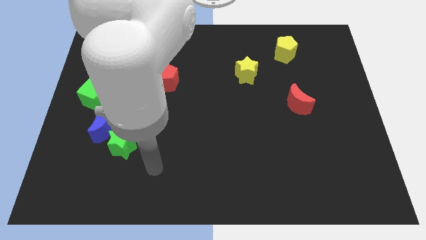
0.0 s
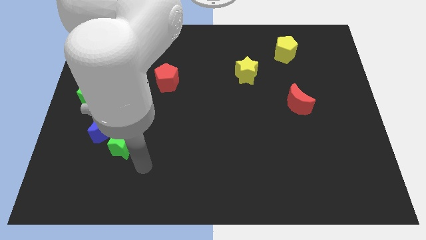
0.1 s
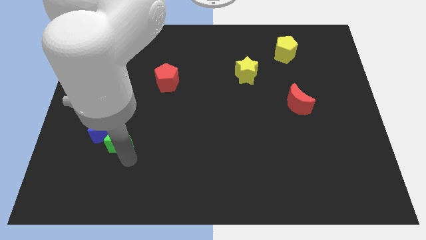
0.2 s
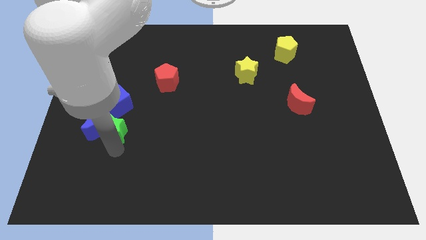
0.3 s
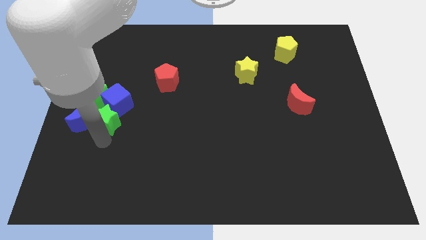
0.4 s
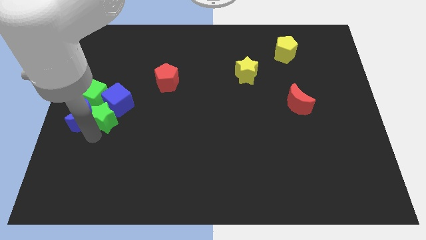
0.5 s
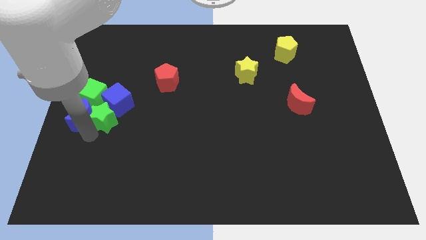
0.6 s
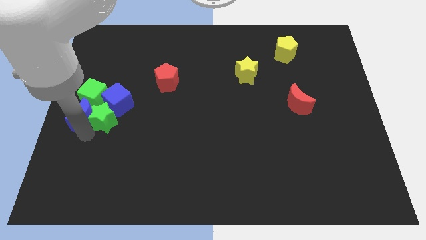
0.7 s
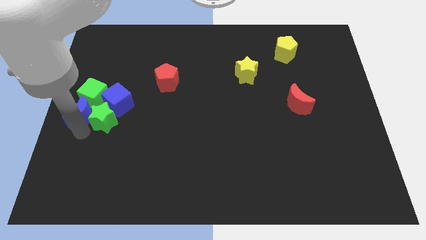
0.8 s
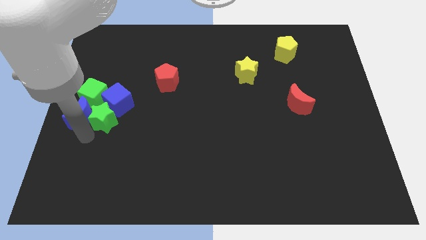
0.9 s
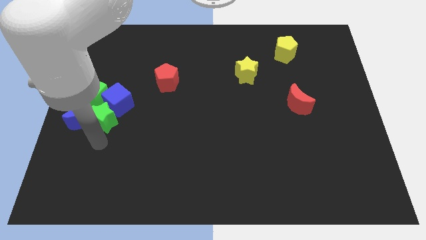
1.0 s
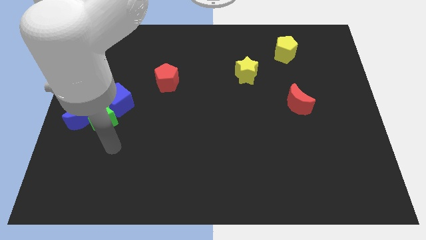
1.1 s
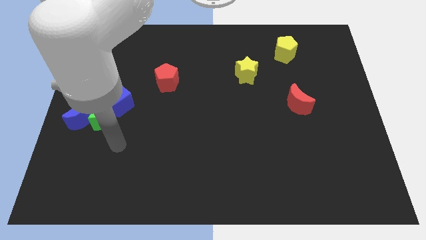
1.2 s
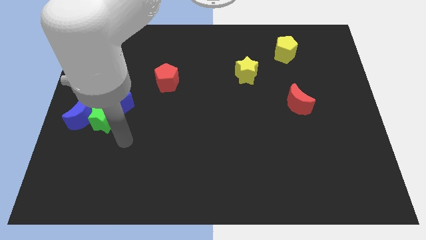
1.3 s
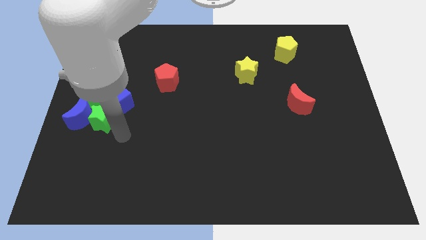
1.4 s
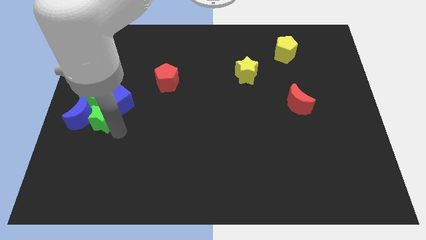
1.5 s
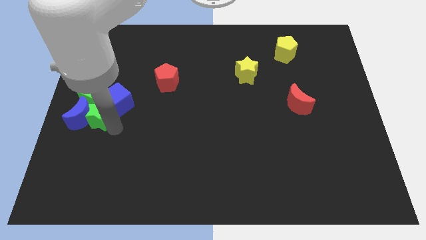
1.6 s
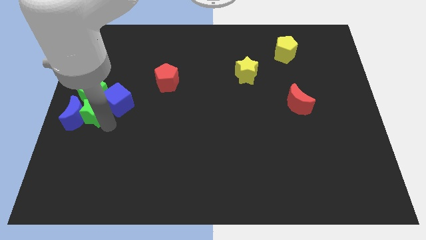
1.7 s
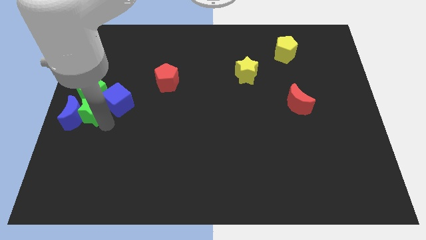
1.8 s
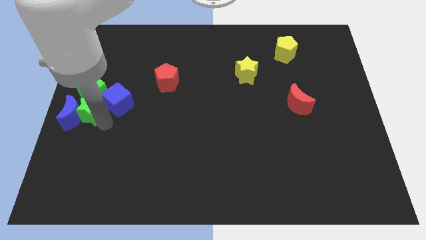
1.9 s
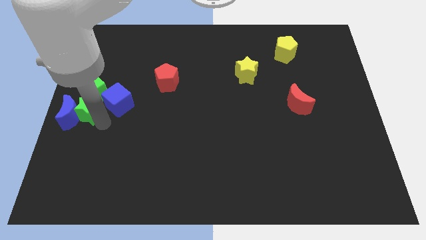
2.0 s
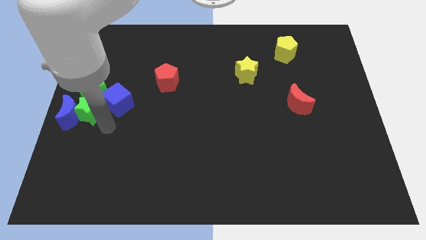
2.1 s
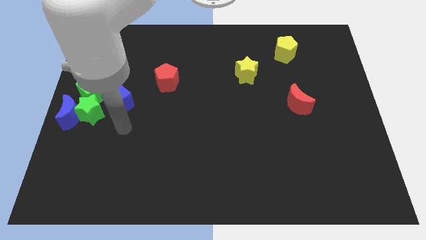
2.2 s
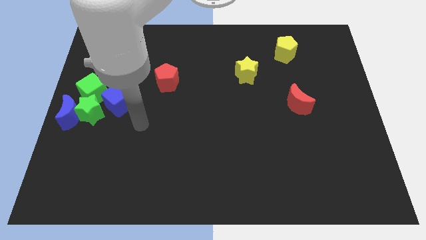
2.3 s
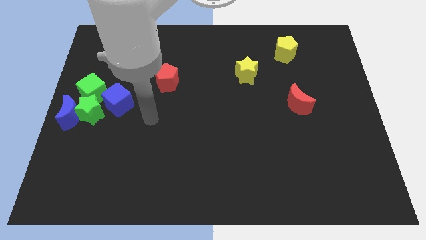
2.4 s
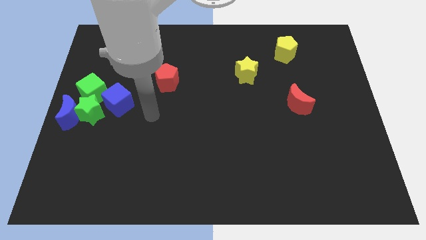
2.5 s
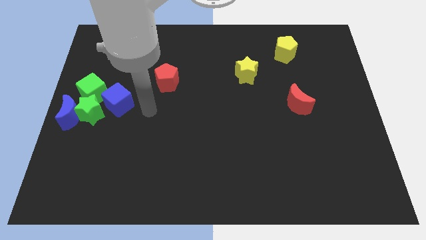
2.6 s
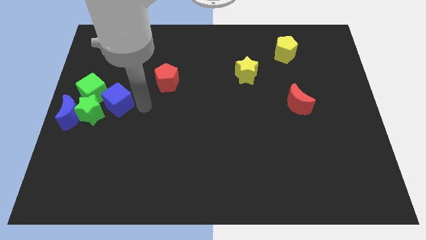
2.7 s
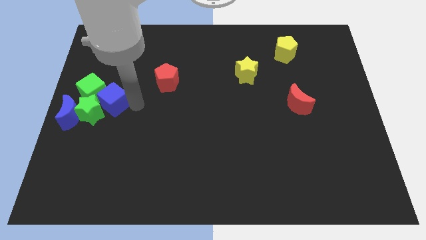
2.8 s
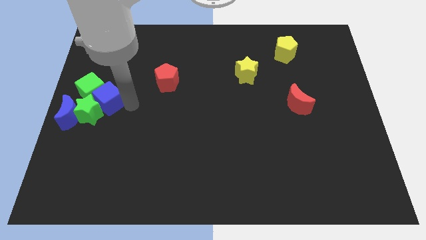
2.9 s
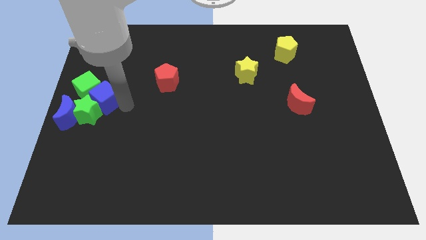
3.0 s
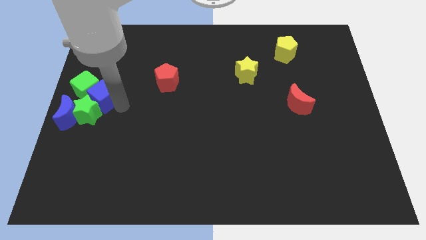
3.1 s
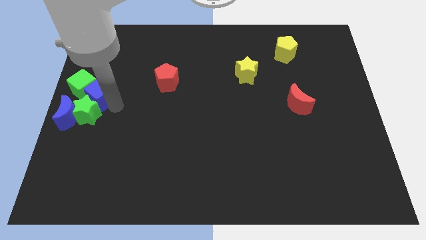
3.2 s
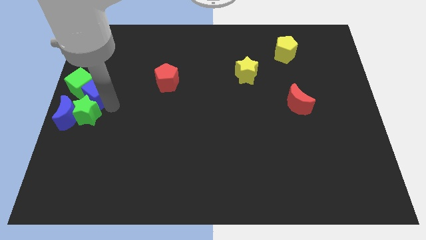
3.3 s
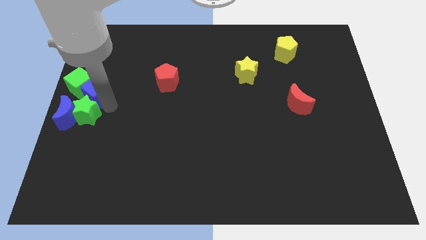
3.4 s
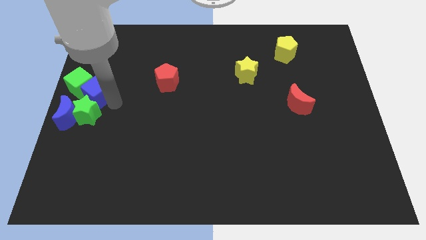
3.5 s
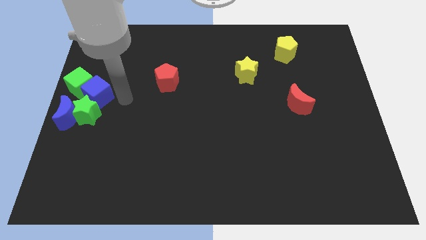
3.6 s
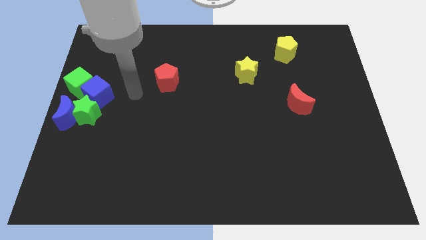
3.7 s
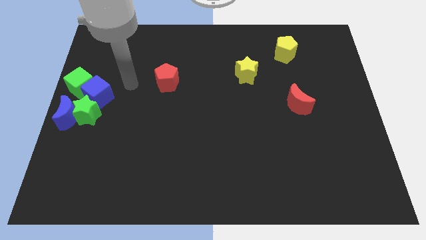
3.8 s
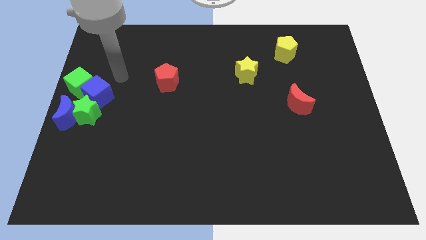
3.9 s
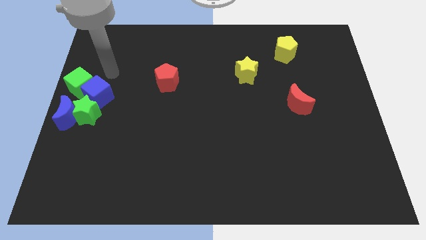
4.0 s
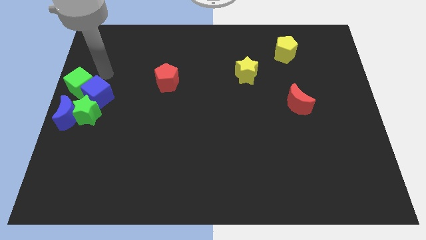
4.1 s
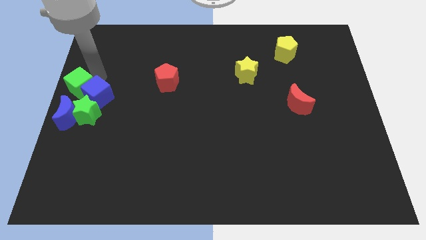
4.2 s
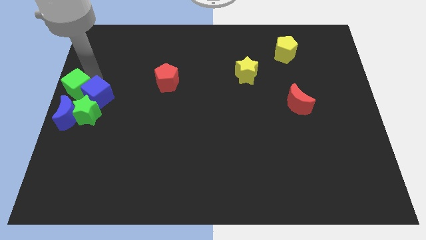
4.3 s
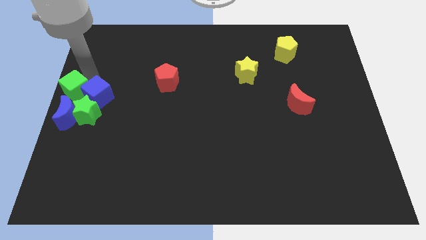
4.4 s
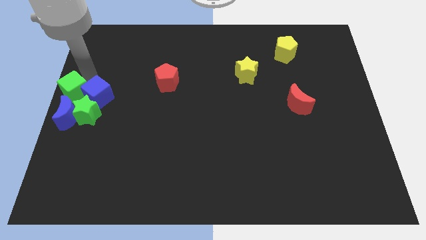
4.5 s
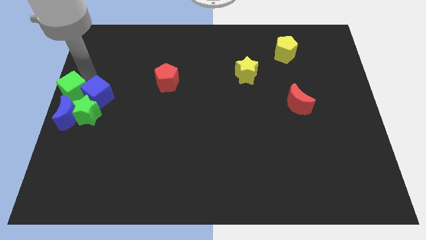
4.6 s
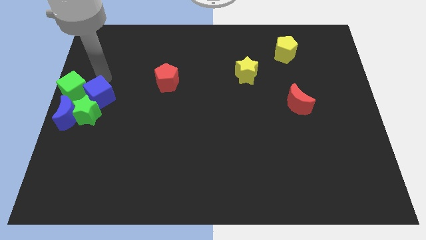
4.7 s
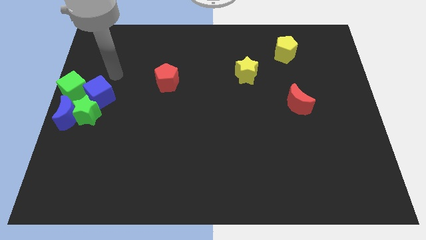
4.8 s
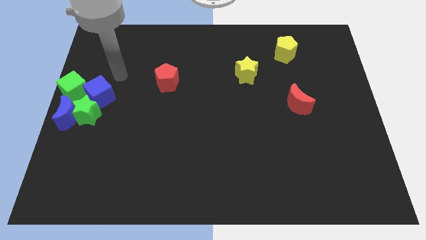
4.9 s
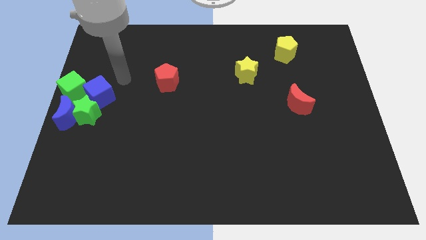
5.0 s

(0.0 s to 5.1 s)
move green blocks and blue blocks together to the center left

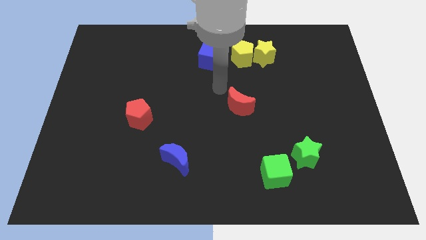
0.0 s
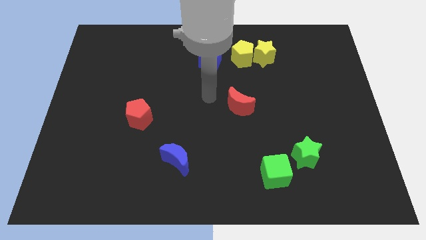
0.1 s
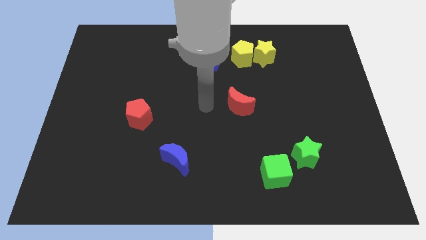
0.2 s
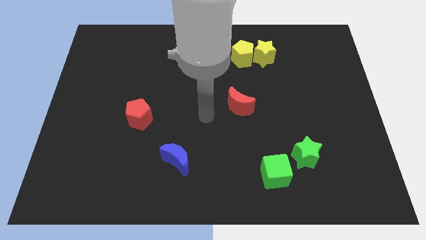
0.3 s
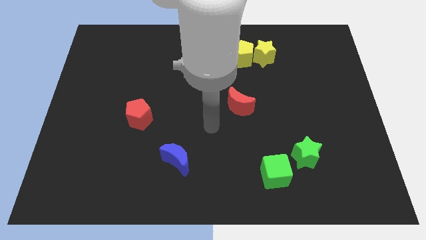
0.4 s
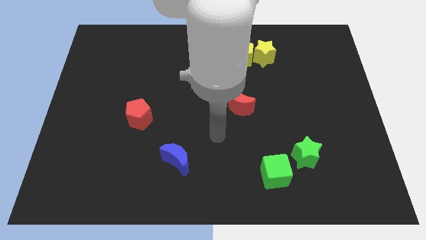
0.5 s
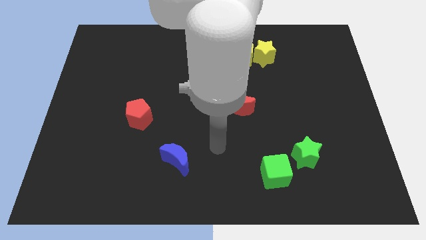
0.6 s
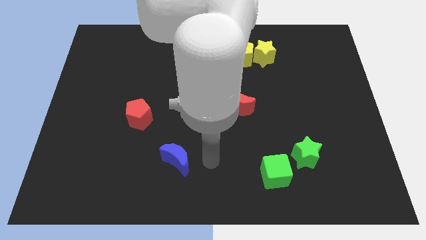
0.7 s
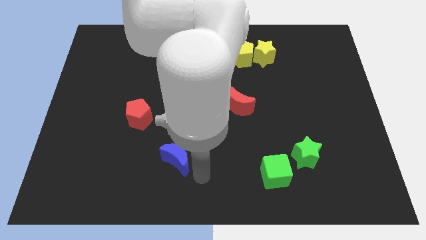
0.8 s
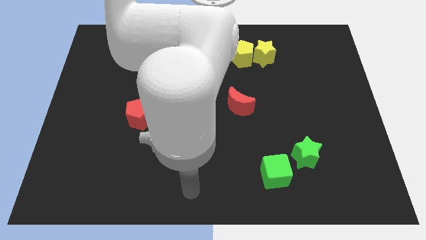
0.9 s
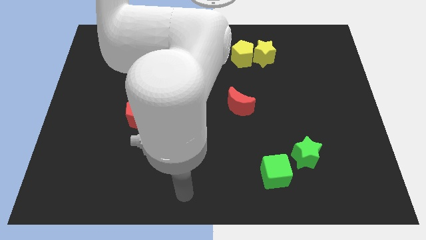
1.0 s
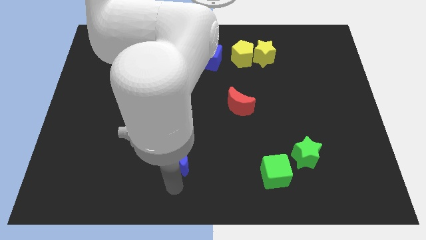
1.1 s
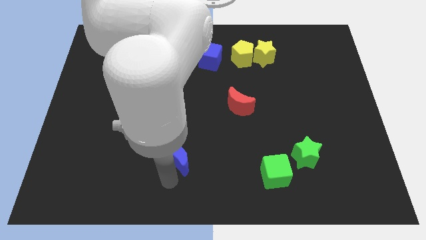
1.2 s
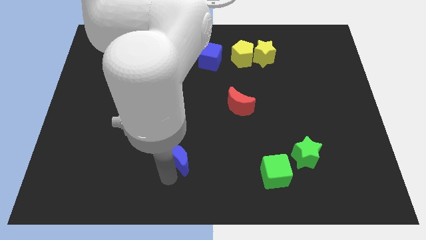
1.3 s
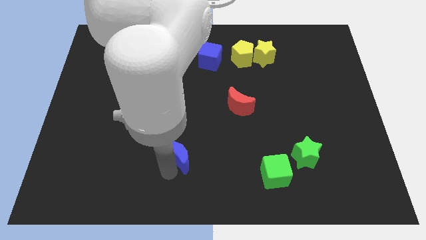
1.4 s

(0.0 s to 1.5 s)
point the arm below the blue moon

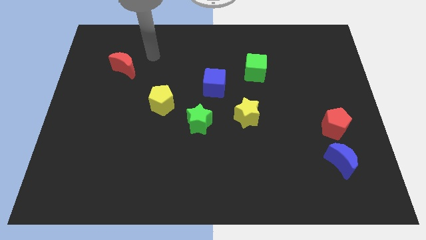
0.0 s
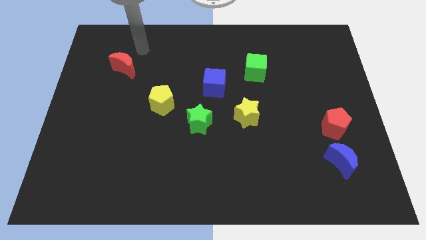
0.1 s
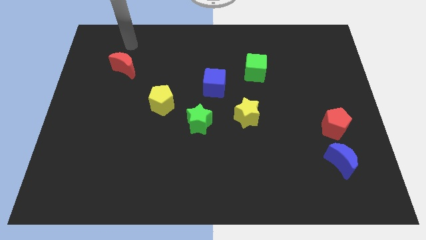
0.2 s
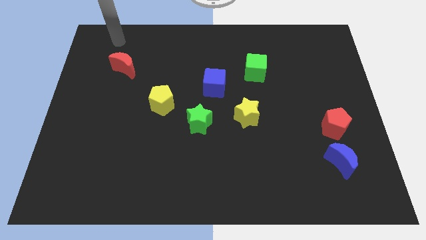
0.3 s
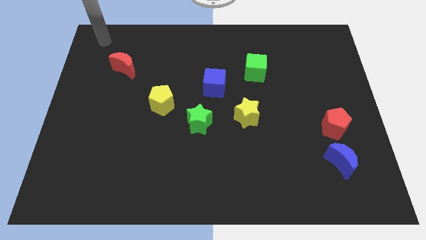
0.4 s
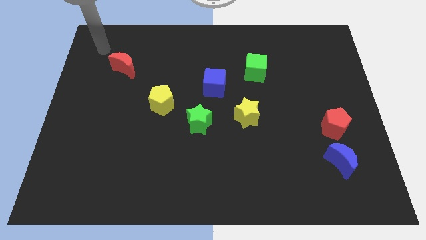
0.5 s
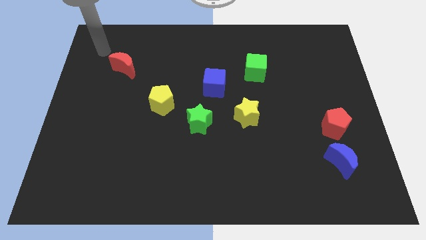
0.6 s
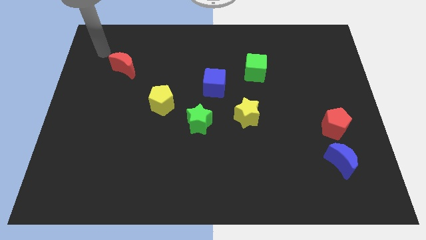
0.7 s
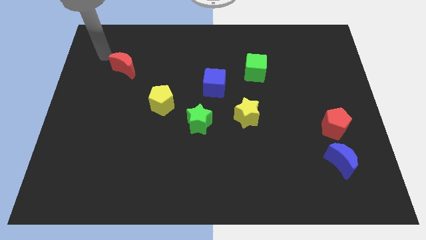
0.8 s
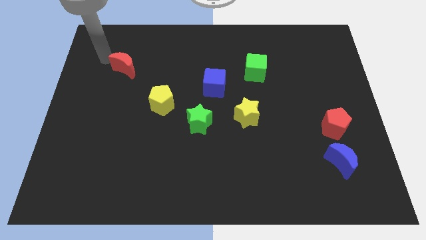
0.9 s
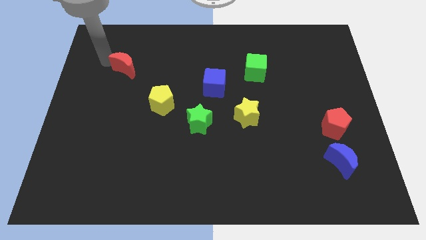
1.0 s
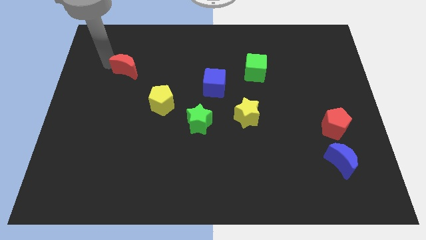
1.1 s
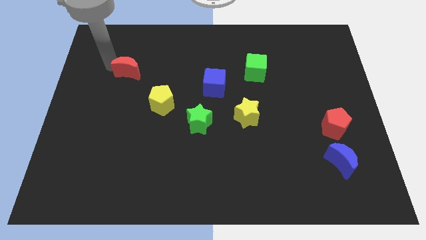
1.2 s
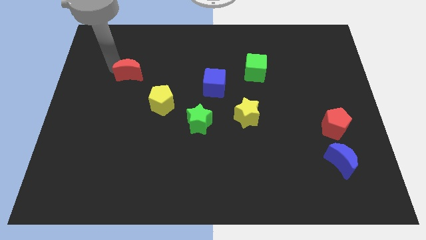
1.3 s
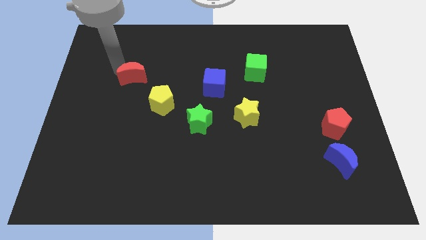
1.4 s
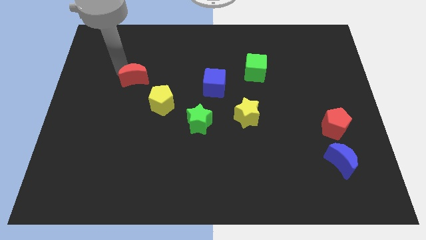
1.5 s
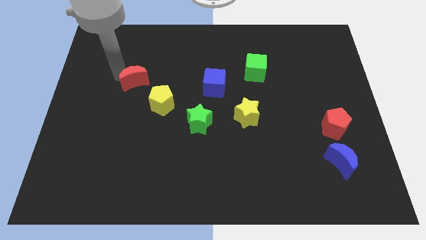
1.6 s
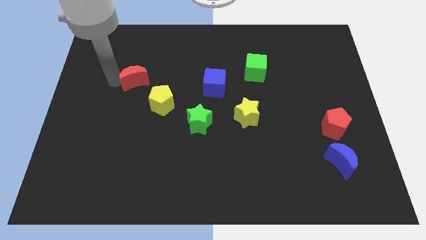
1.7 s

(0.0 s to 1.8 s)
turn the red moon diagonal to the yellow pentagon

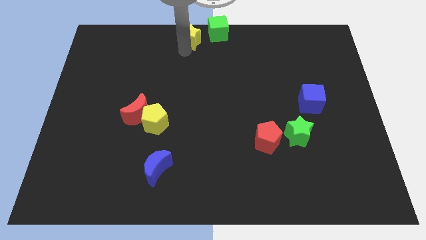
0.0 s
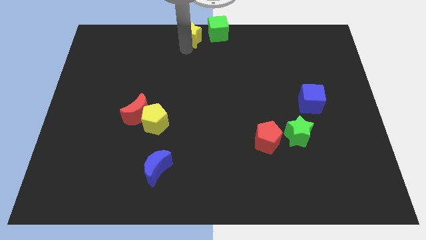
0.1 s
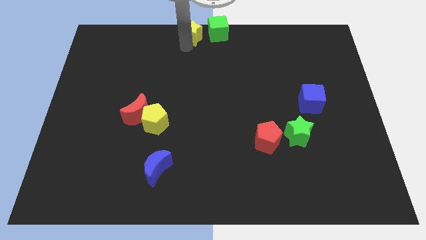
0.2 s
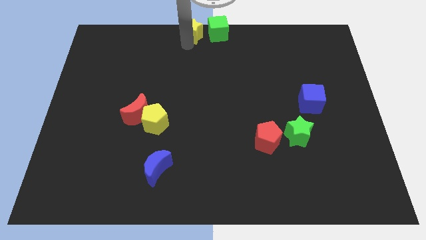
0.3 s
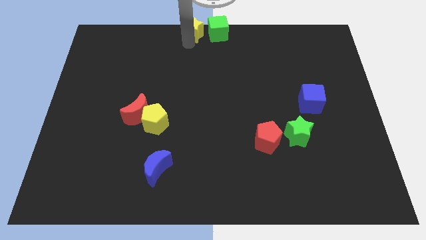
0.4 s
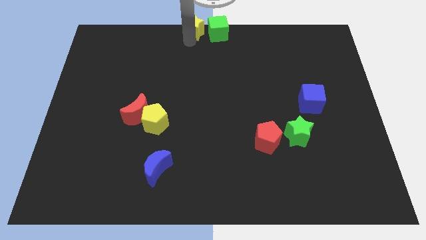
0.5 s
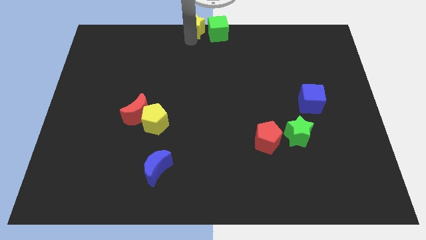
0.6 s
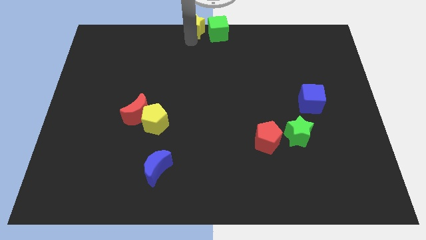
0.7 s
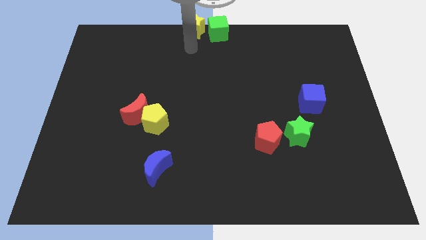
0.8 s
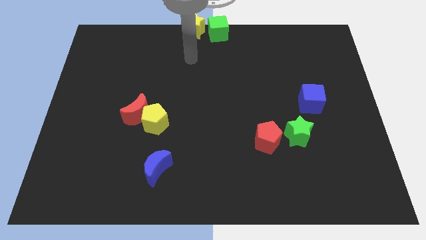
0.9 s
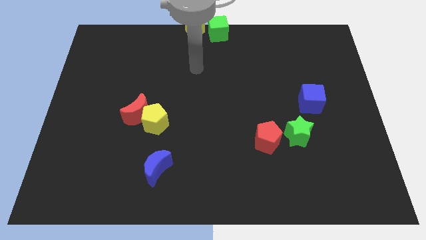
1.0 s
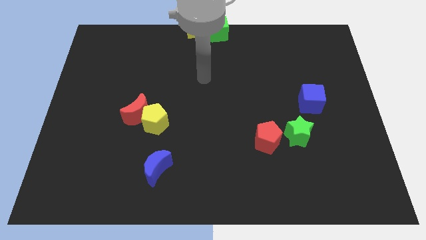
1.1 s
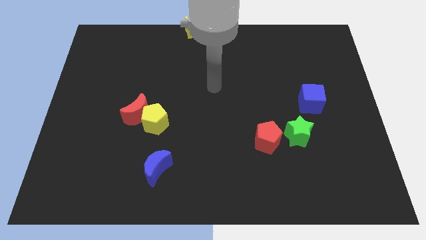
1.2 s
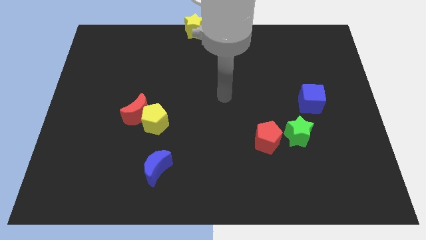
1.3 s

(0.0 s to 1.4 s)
place the yellow star to the left of the green cube
